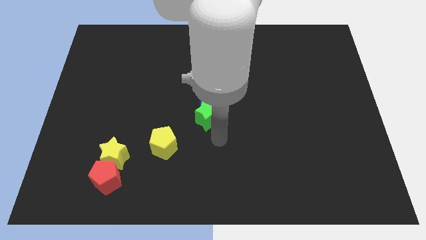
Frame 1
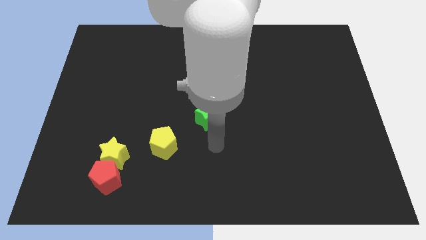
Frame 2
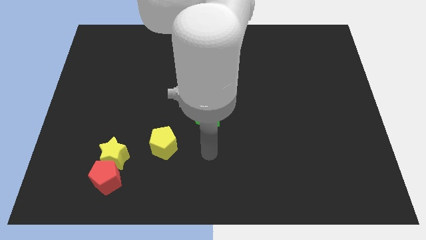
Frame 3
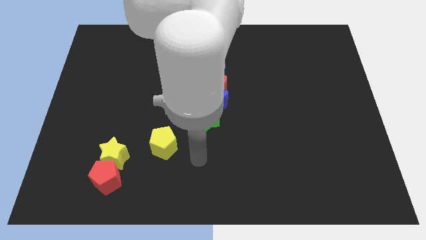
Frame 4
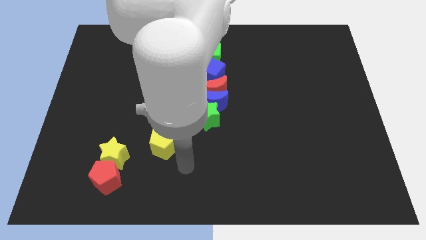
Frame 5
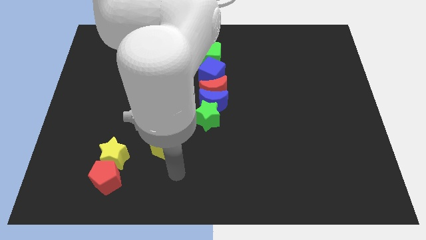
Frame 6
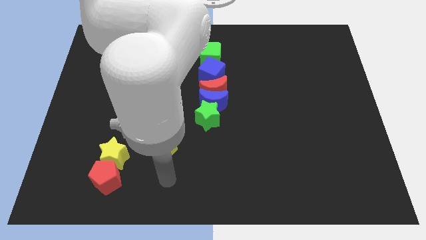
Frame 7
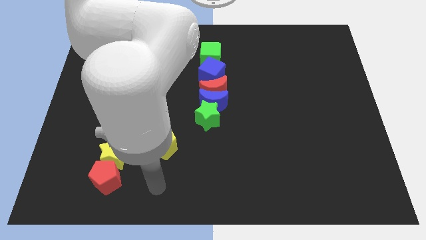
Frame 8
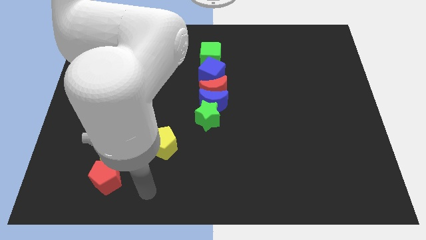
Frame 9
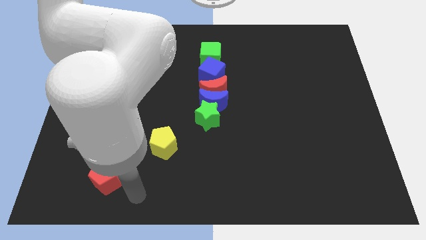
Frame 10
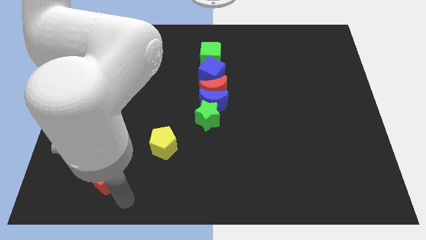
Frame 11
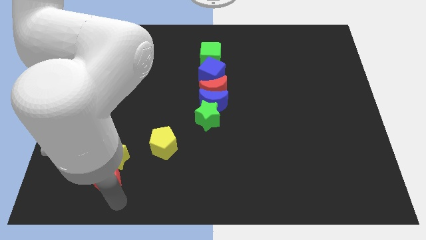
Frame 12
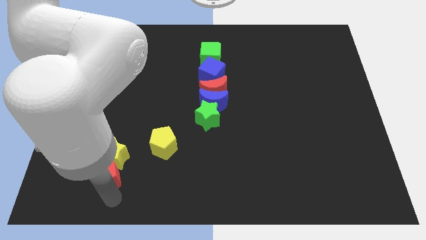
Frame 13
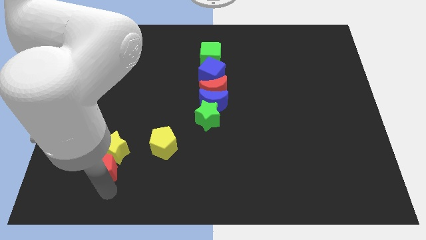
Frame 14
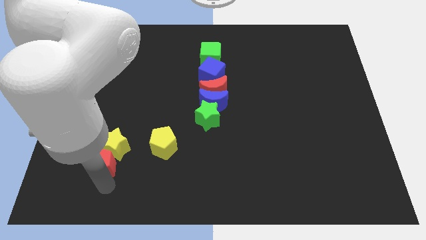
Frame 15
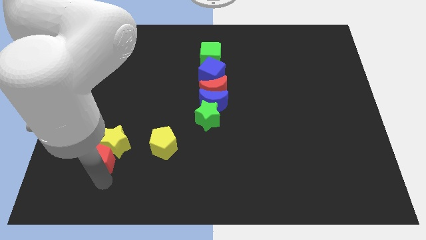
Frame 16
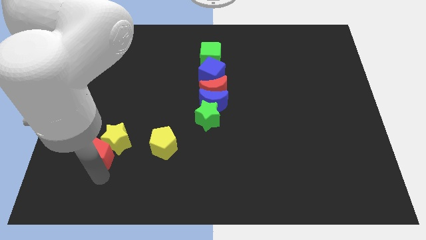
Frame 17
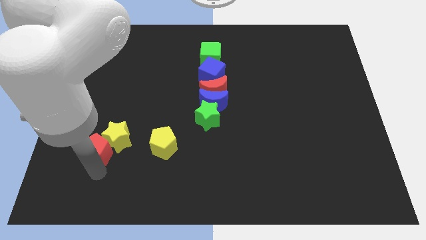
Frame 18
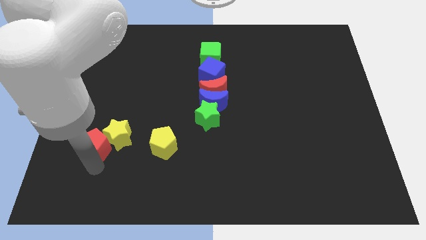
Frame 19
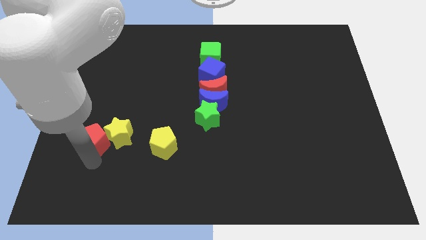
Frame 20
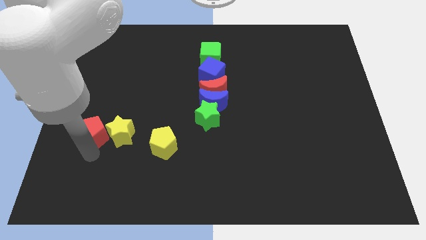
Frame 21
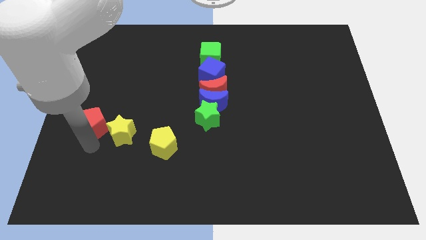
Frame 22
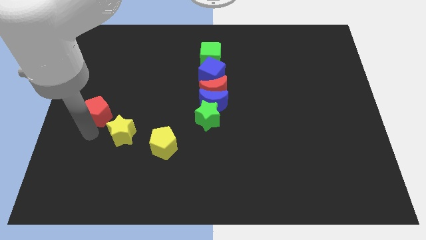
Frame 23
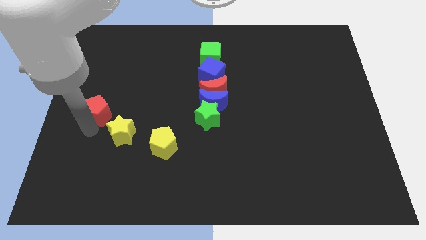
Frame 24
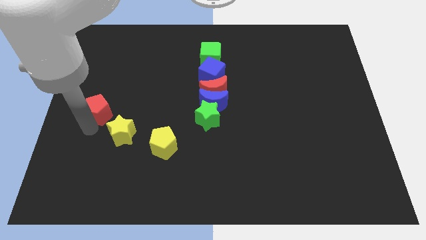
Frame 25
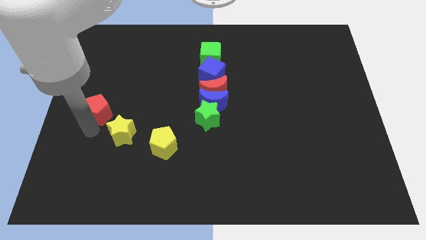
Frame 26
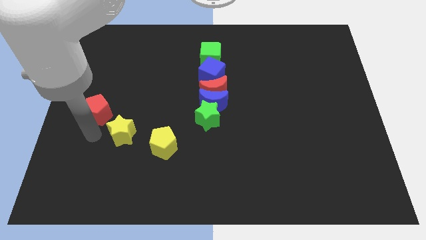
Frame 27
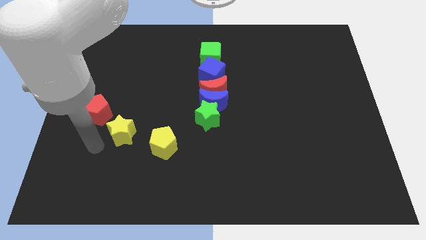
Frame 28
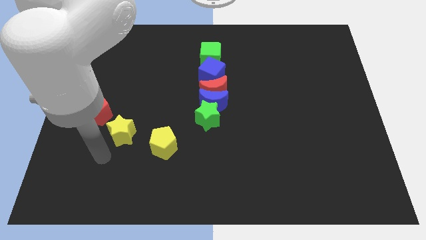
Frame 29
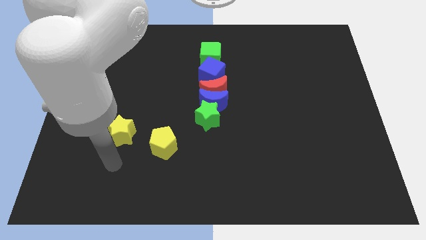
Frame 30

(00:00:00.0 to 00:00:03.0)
move the red pentagon to the top left of the yellow star

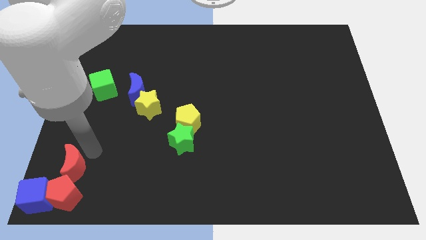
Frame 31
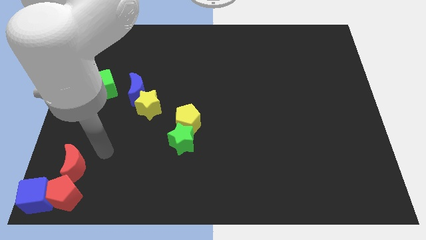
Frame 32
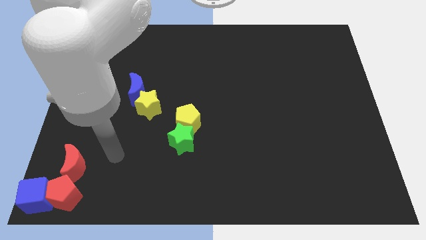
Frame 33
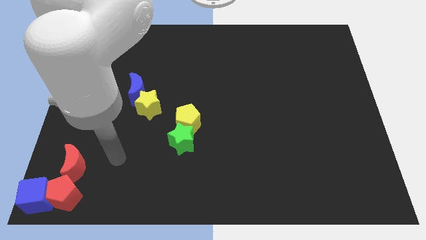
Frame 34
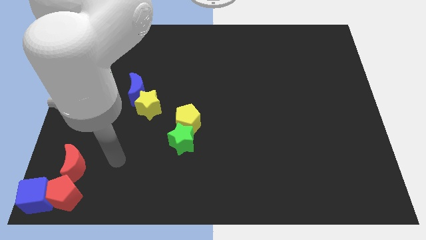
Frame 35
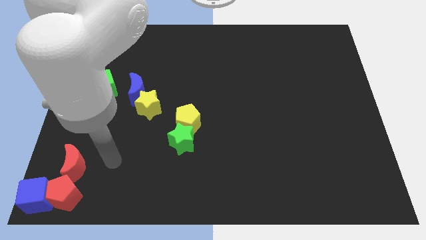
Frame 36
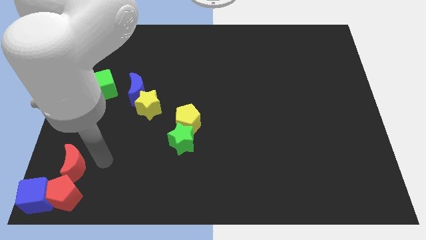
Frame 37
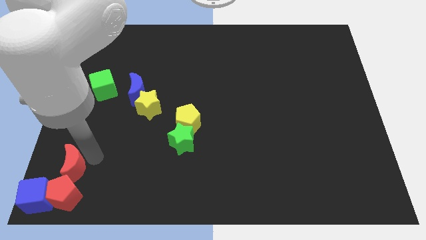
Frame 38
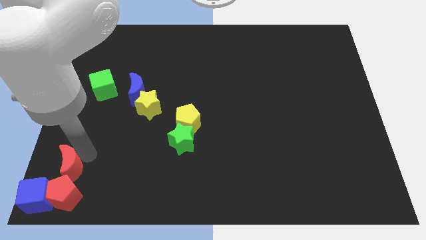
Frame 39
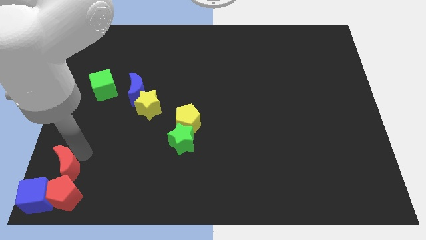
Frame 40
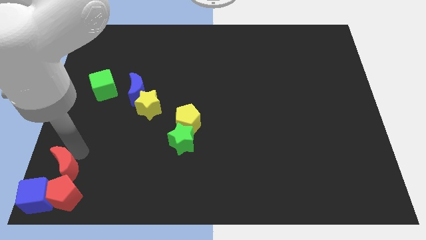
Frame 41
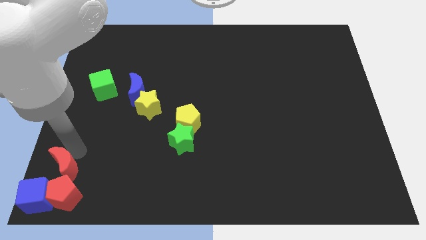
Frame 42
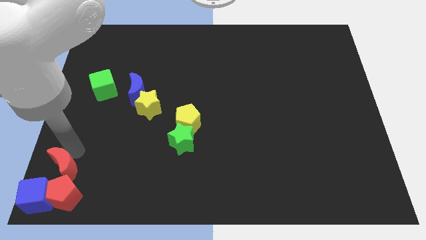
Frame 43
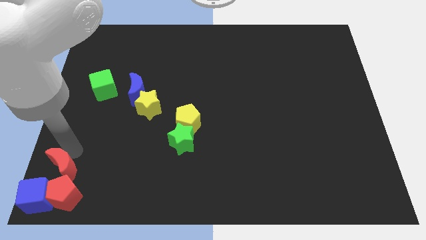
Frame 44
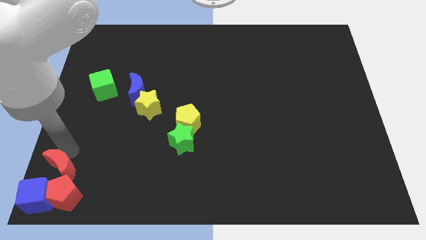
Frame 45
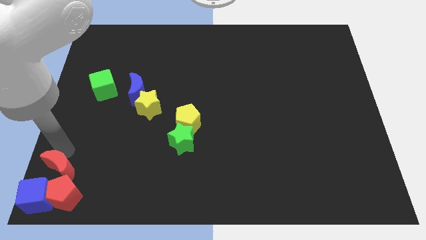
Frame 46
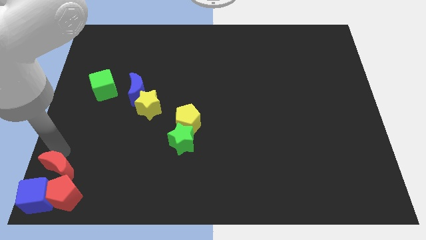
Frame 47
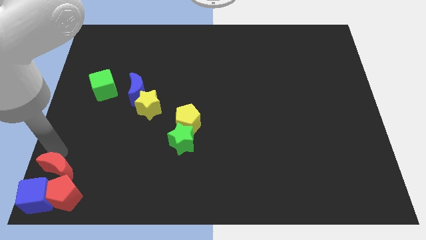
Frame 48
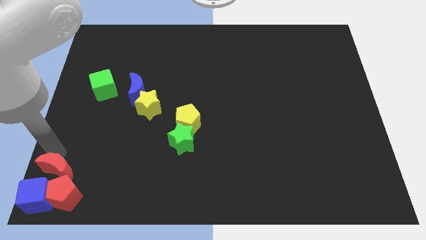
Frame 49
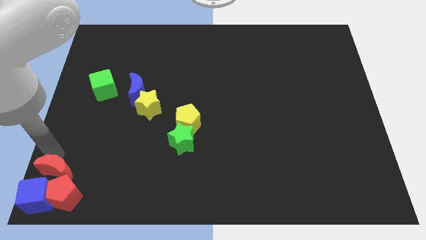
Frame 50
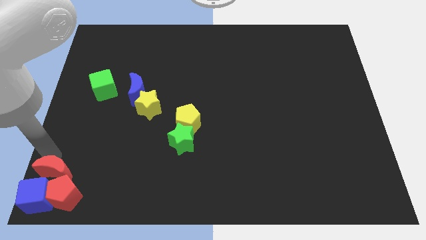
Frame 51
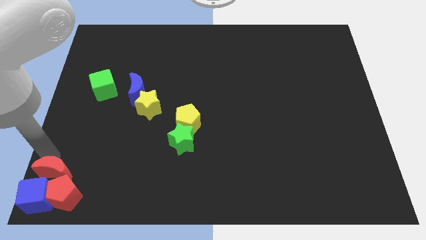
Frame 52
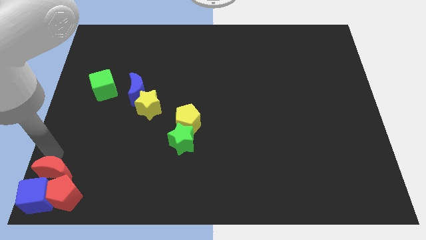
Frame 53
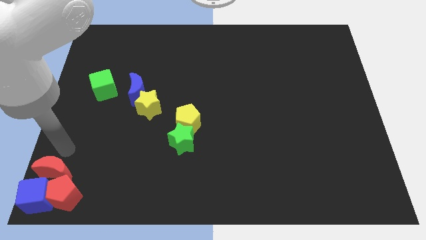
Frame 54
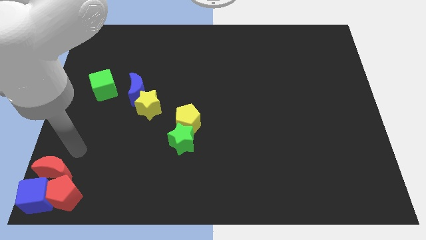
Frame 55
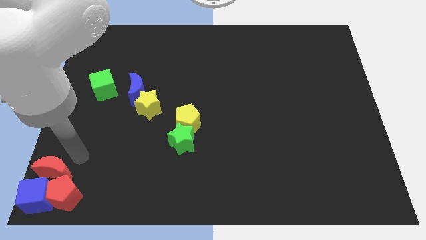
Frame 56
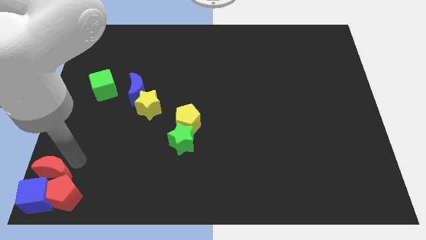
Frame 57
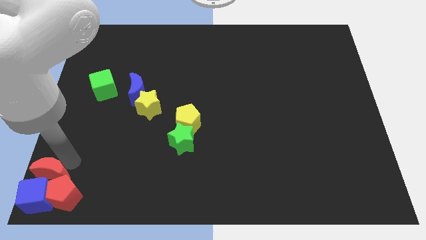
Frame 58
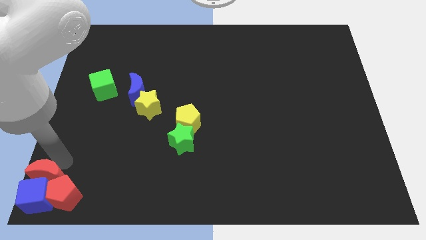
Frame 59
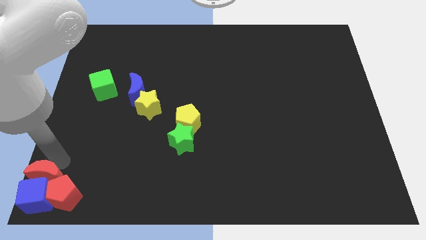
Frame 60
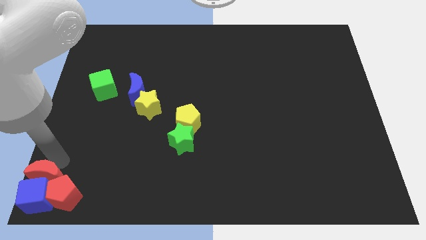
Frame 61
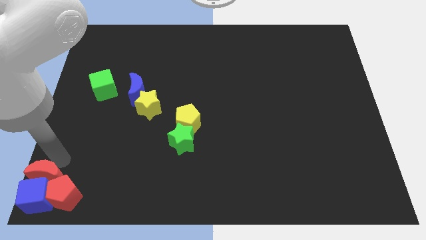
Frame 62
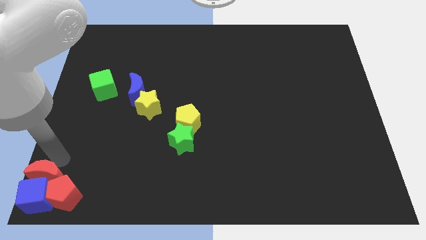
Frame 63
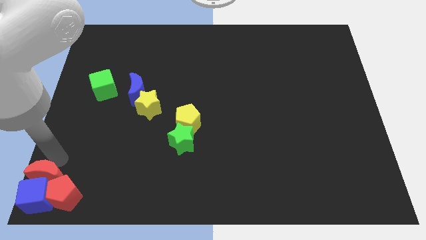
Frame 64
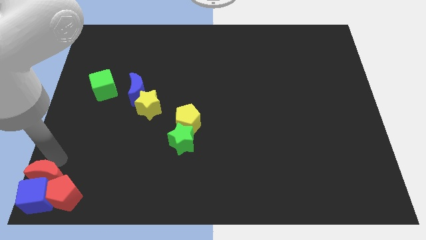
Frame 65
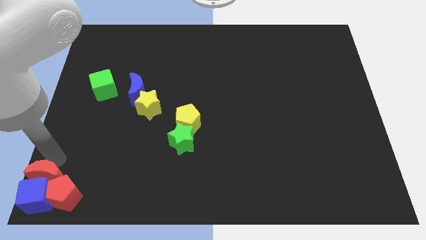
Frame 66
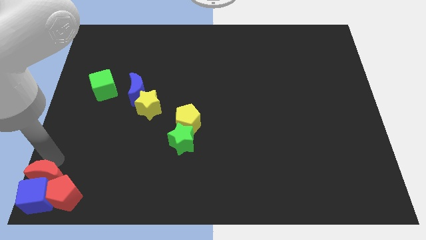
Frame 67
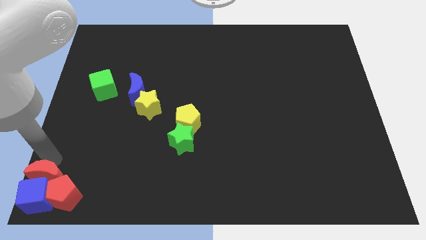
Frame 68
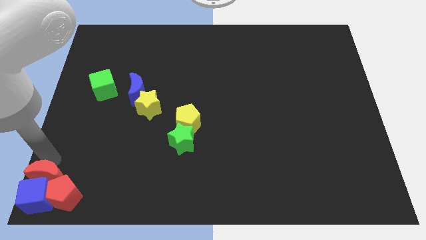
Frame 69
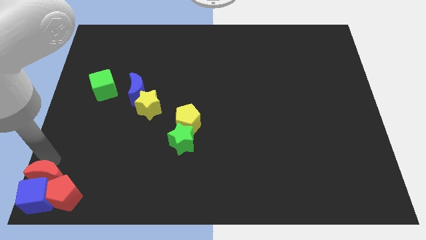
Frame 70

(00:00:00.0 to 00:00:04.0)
place red crescent above the blue cube

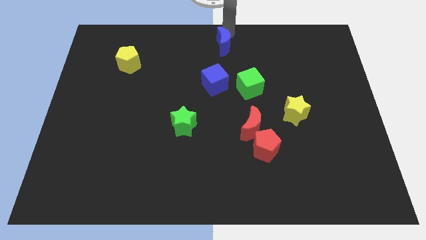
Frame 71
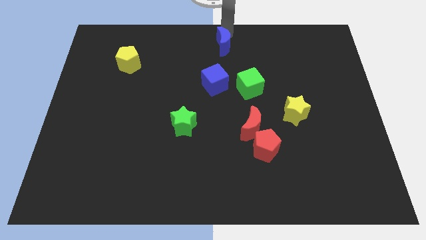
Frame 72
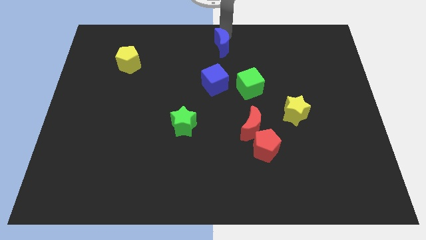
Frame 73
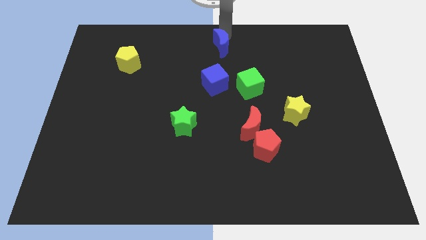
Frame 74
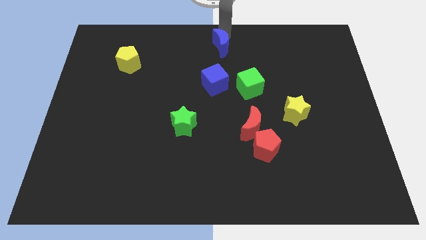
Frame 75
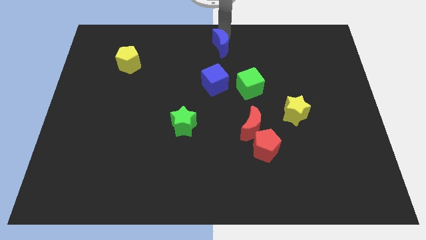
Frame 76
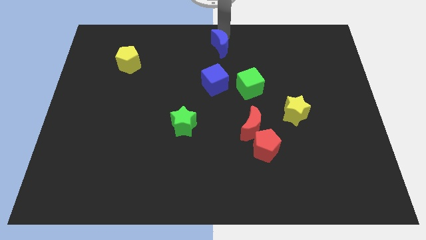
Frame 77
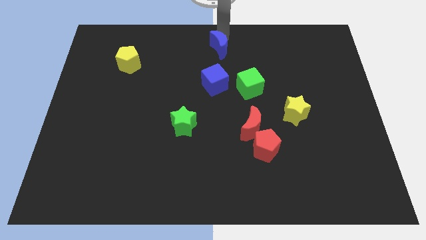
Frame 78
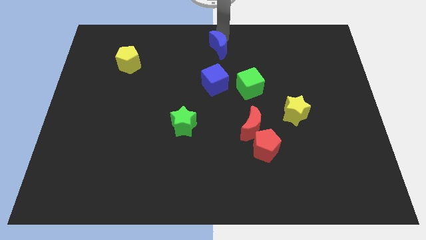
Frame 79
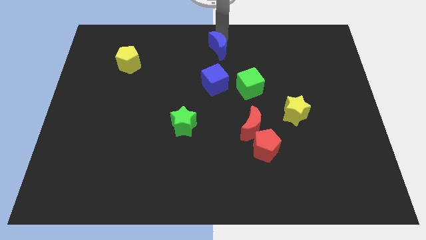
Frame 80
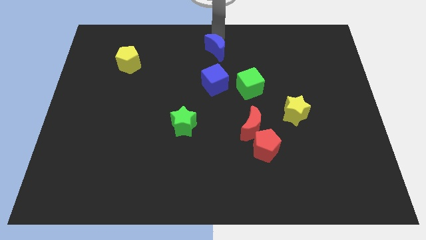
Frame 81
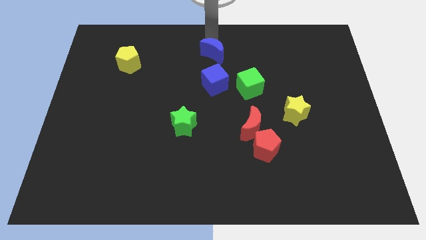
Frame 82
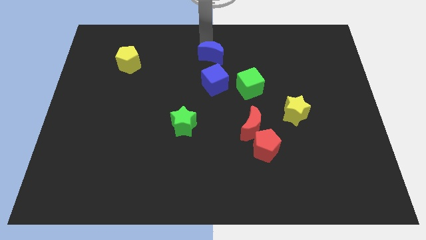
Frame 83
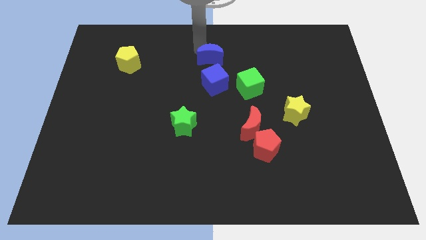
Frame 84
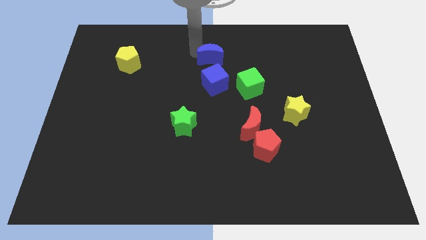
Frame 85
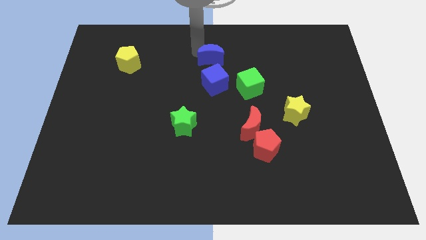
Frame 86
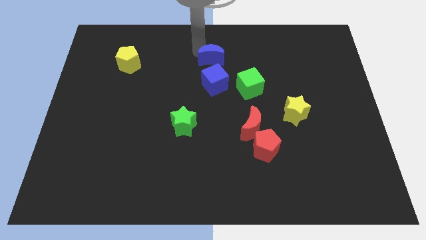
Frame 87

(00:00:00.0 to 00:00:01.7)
move the blue moon close to the blue cube

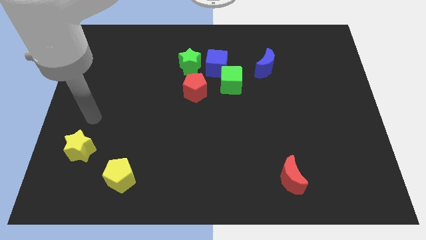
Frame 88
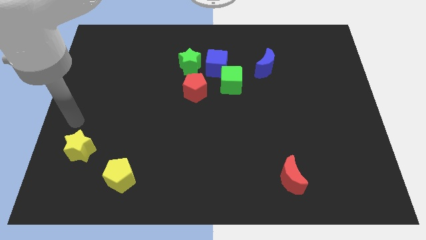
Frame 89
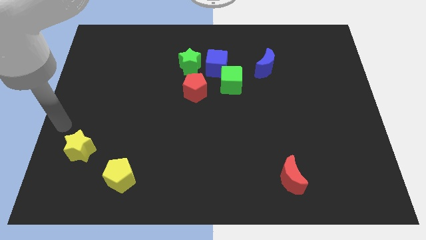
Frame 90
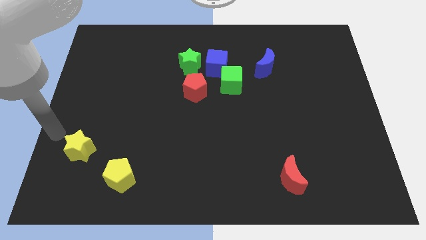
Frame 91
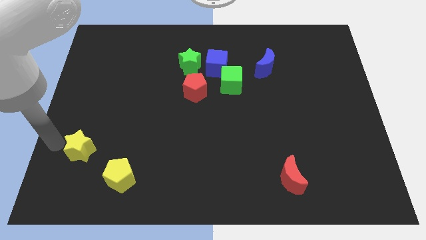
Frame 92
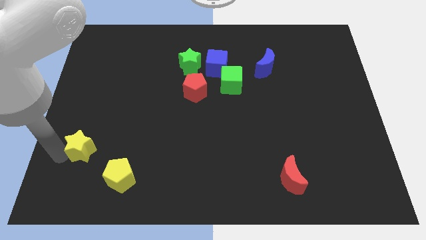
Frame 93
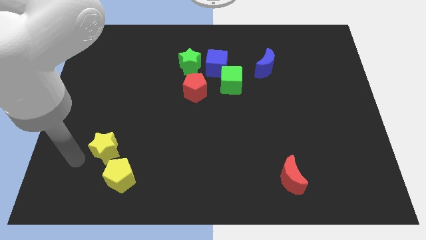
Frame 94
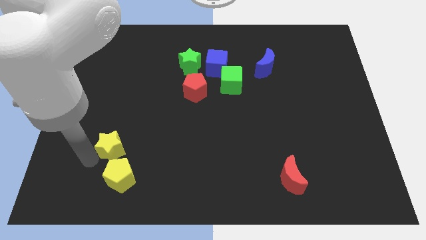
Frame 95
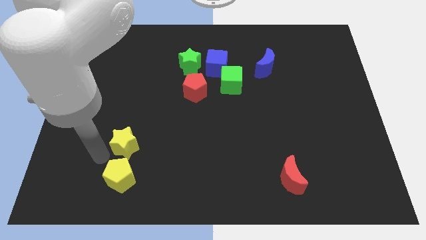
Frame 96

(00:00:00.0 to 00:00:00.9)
move the yellow star on the top of yellow pentagon
